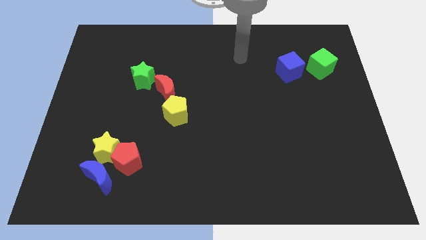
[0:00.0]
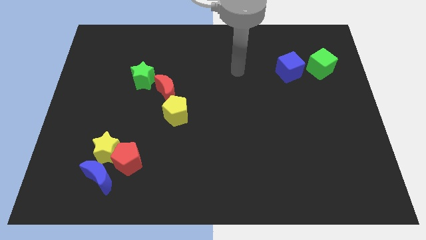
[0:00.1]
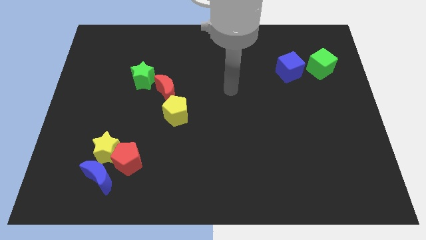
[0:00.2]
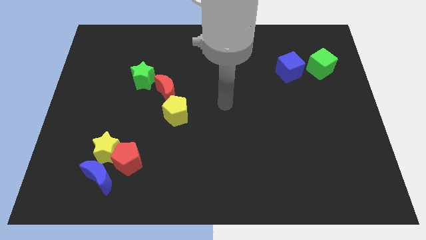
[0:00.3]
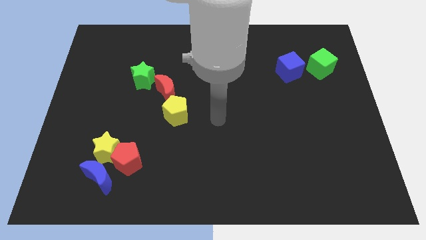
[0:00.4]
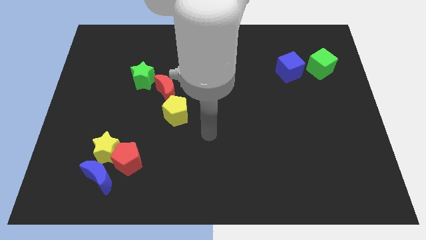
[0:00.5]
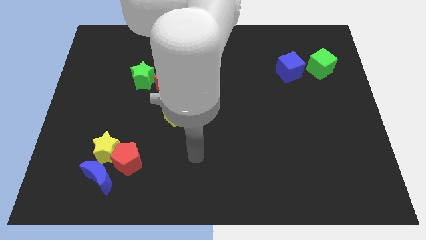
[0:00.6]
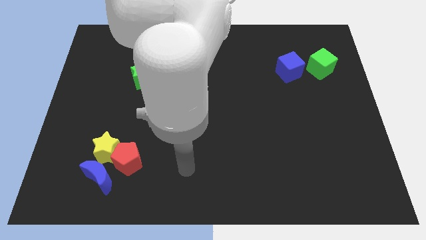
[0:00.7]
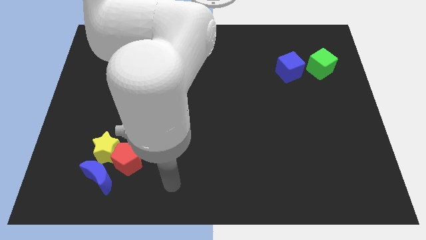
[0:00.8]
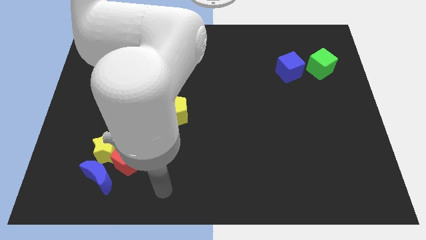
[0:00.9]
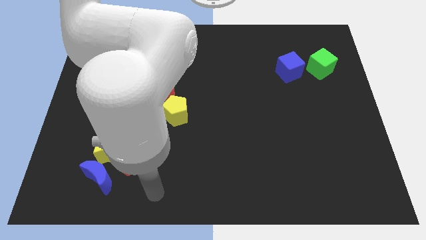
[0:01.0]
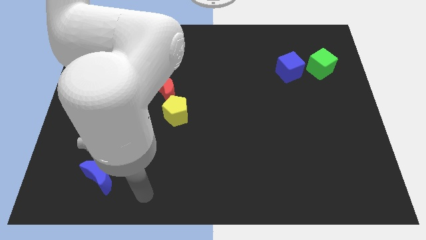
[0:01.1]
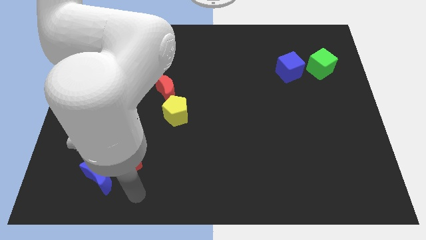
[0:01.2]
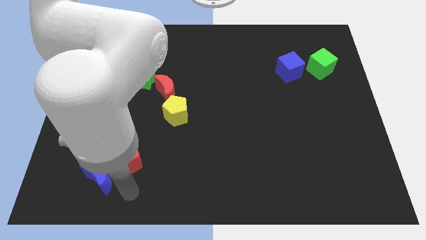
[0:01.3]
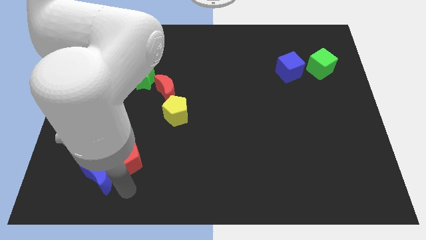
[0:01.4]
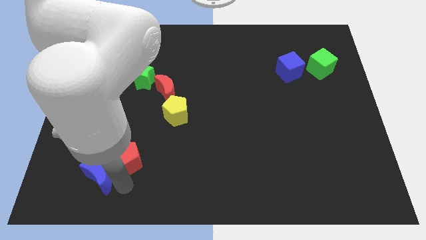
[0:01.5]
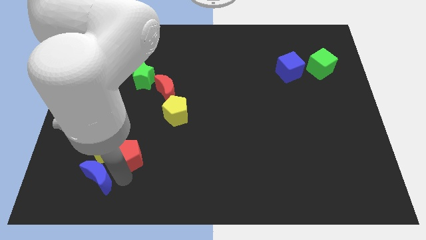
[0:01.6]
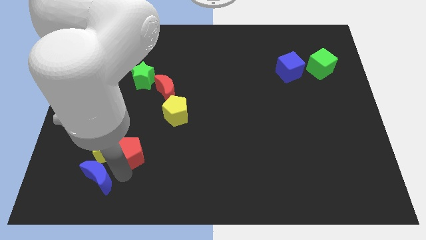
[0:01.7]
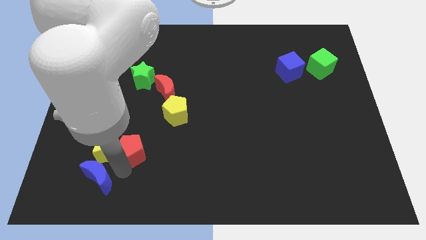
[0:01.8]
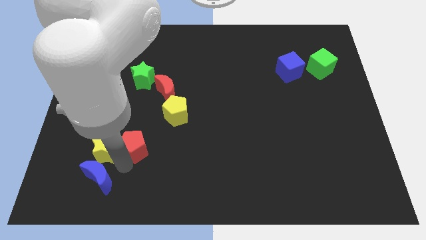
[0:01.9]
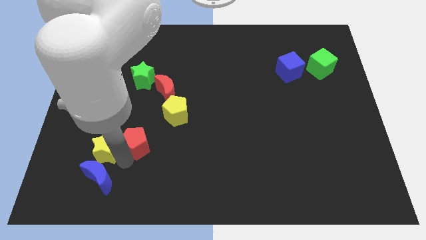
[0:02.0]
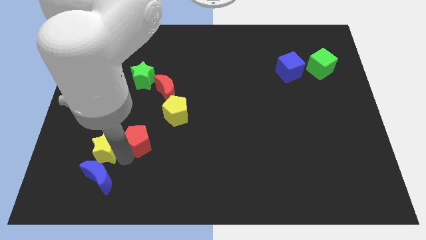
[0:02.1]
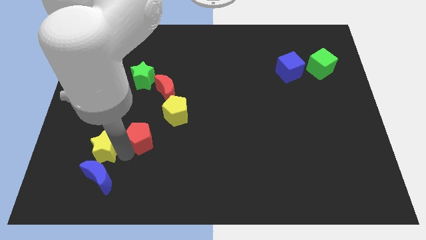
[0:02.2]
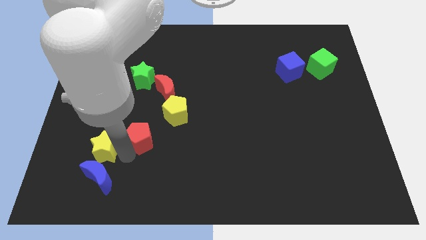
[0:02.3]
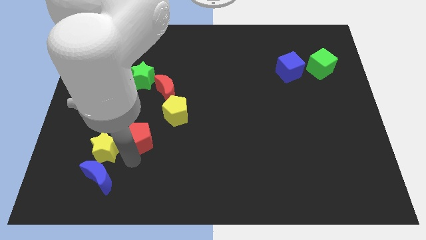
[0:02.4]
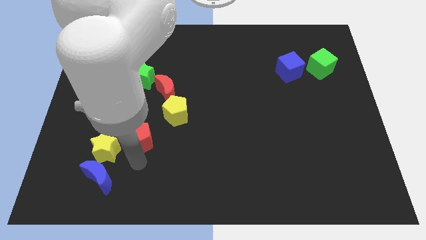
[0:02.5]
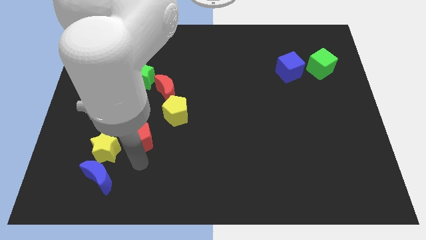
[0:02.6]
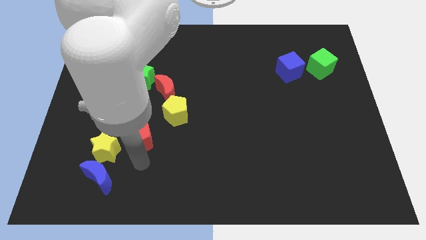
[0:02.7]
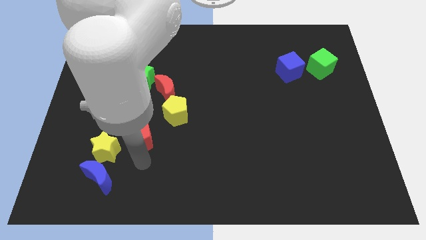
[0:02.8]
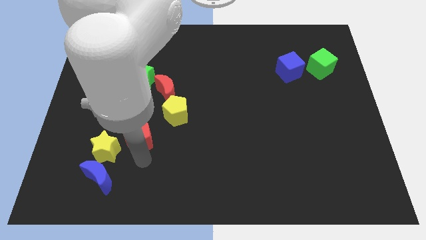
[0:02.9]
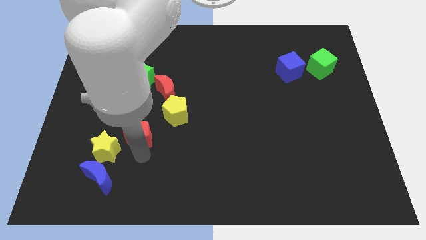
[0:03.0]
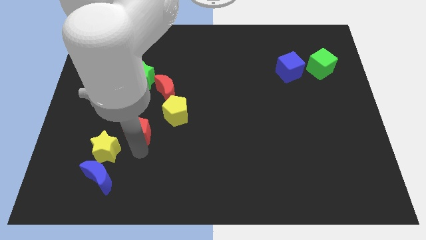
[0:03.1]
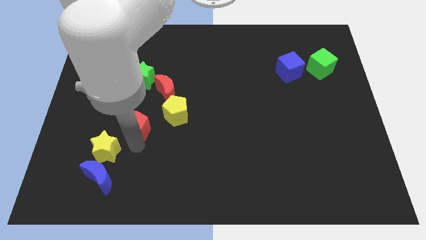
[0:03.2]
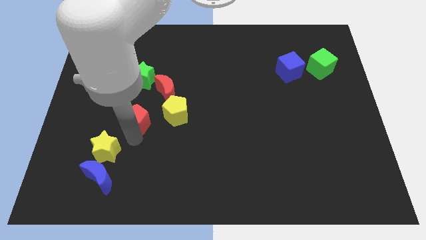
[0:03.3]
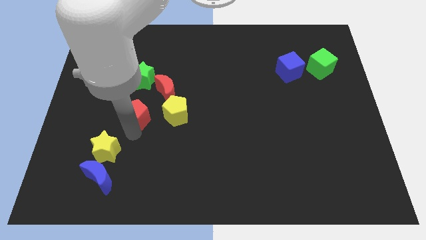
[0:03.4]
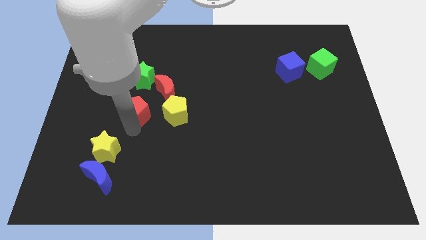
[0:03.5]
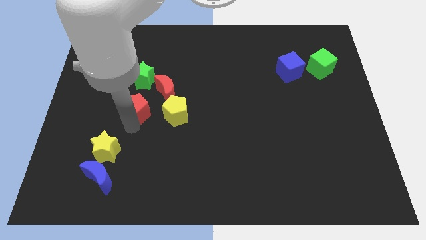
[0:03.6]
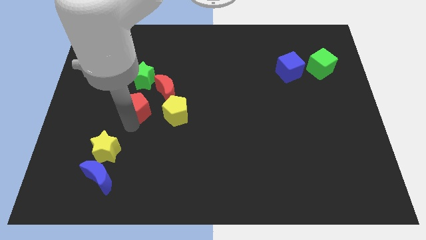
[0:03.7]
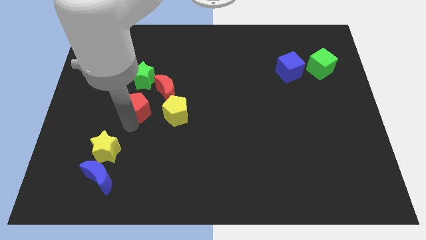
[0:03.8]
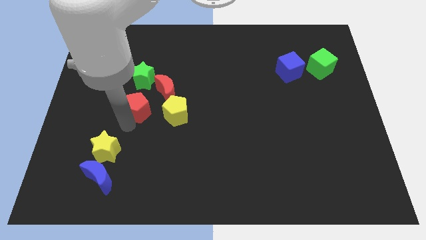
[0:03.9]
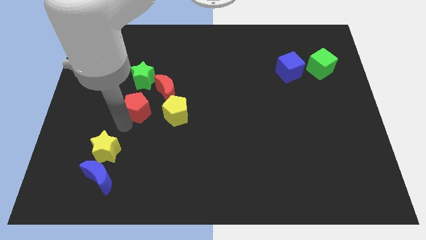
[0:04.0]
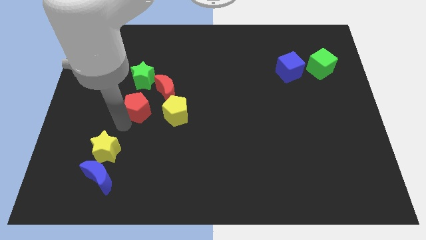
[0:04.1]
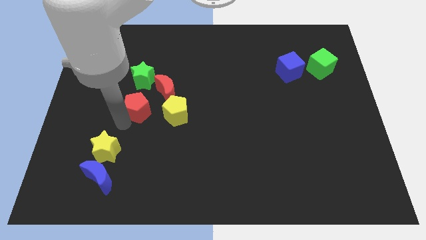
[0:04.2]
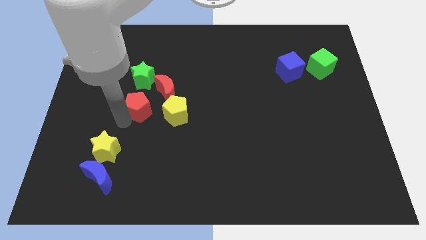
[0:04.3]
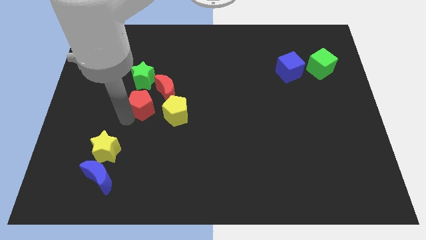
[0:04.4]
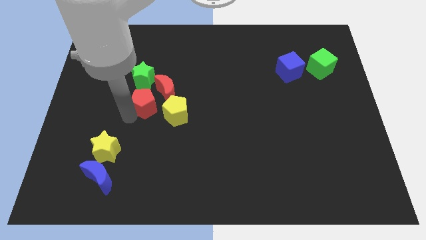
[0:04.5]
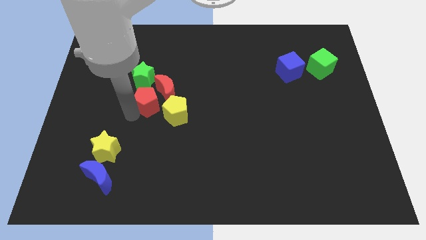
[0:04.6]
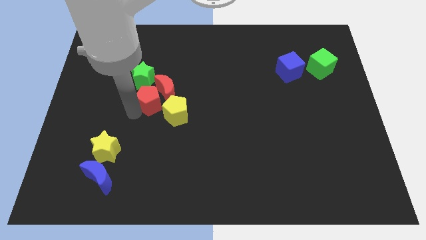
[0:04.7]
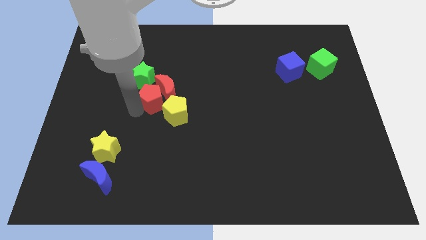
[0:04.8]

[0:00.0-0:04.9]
slide the red pentagon close to the red moon

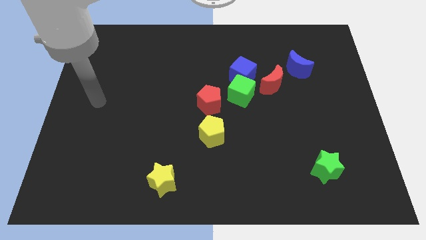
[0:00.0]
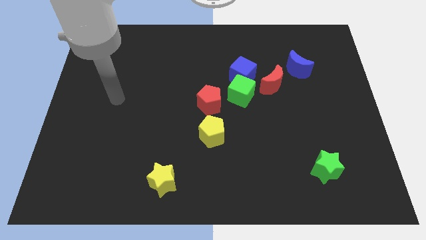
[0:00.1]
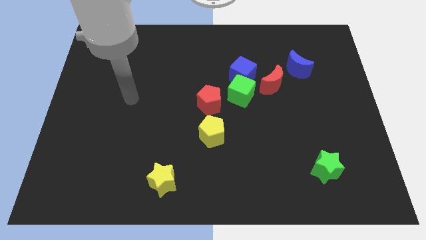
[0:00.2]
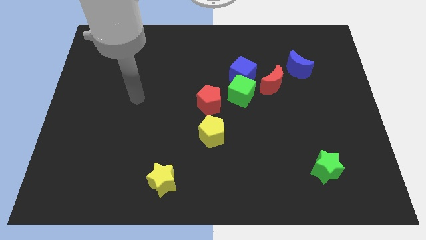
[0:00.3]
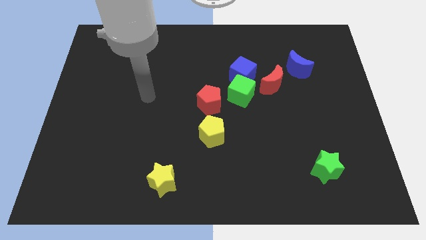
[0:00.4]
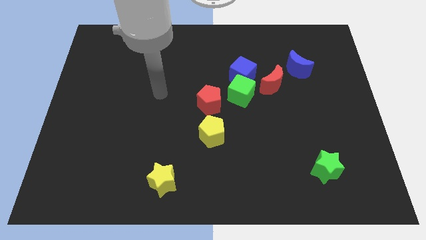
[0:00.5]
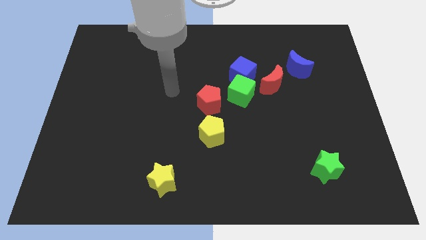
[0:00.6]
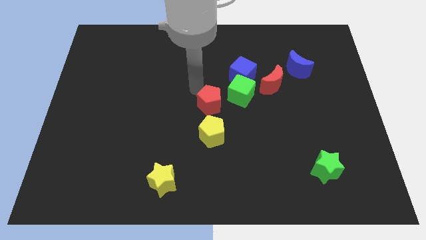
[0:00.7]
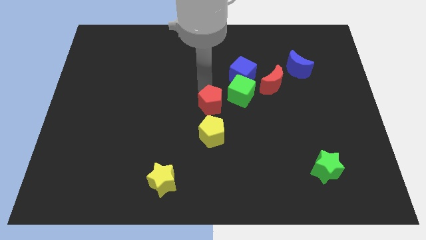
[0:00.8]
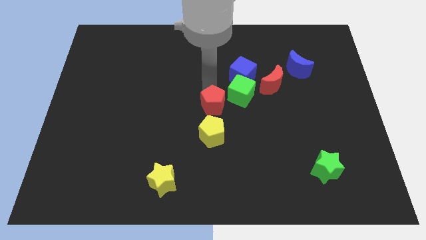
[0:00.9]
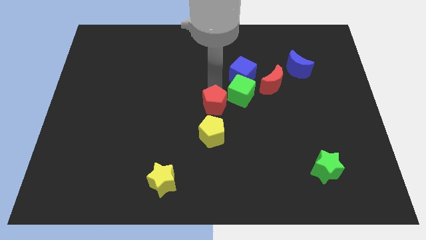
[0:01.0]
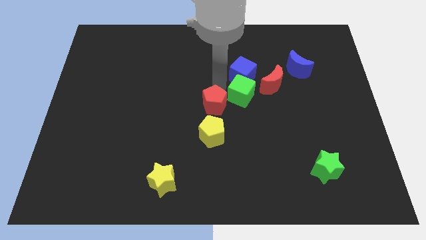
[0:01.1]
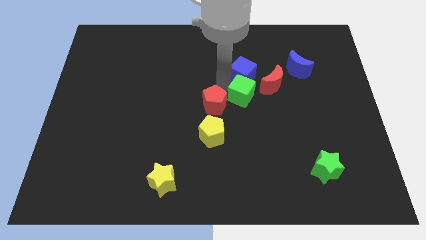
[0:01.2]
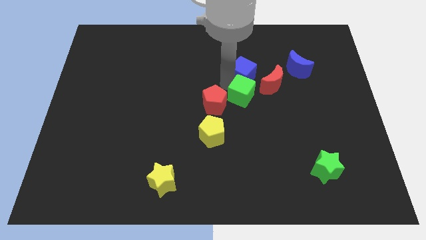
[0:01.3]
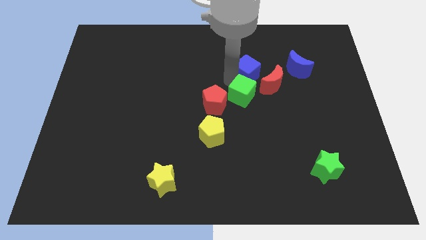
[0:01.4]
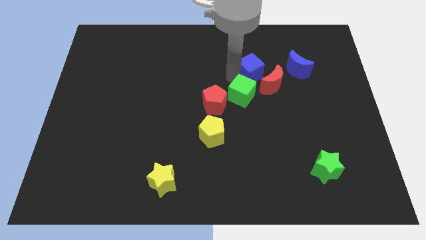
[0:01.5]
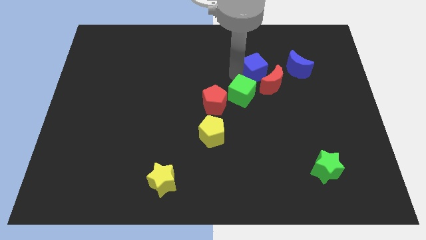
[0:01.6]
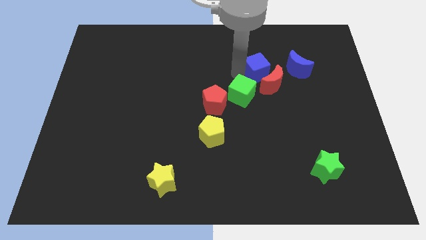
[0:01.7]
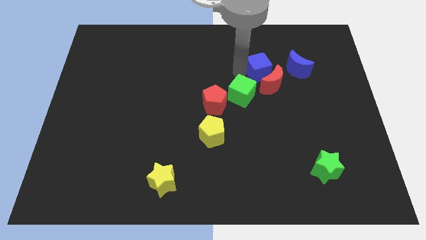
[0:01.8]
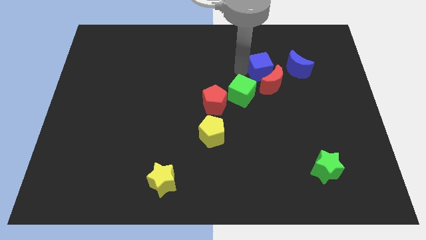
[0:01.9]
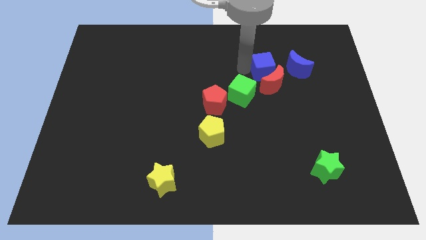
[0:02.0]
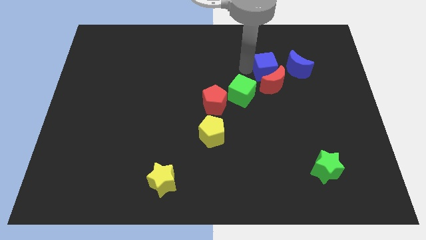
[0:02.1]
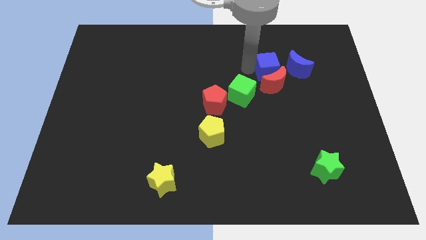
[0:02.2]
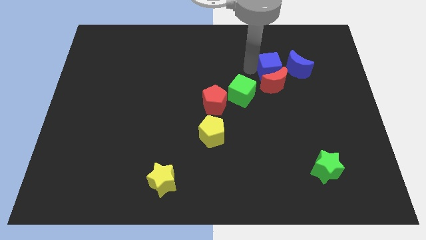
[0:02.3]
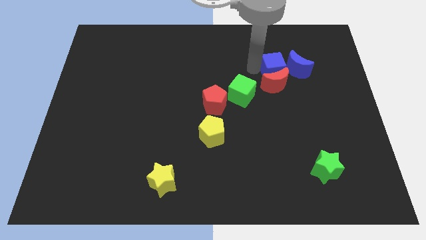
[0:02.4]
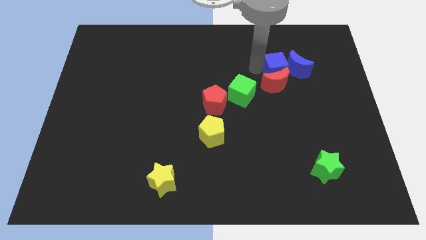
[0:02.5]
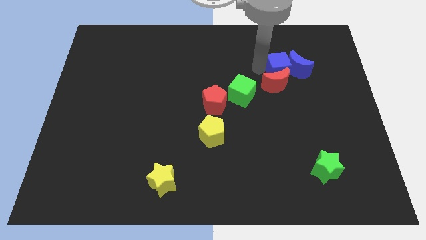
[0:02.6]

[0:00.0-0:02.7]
push the blue cube towards the blue moon

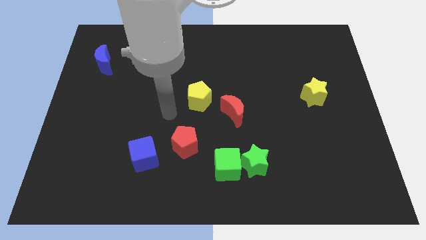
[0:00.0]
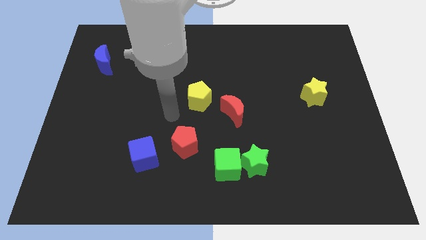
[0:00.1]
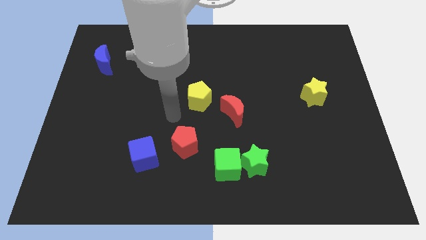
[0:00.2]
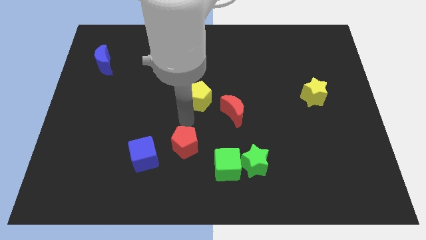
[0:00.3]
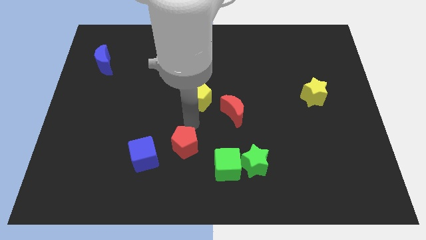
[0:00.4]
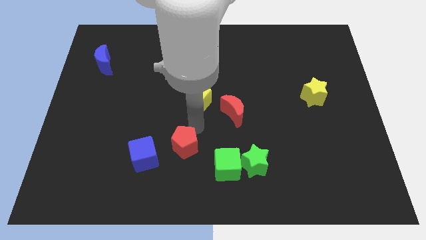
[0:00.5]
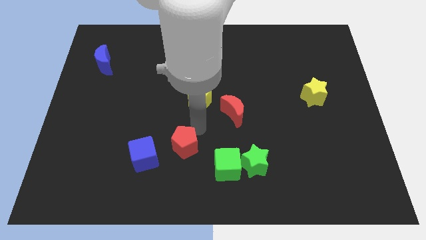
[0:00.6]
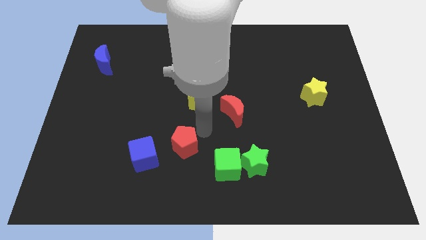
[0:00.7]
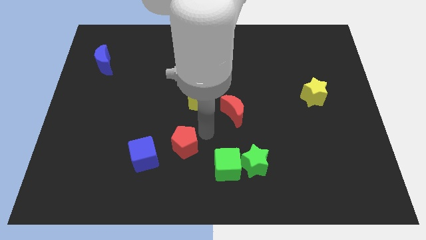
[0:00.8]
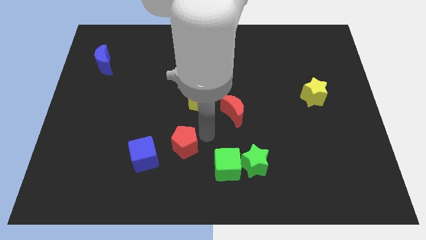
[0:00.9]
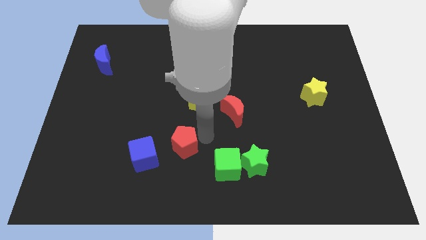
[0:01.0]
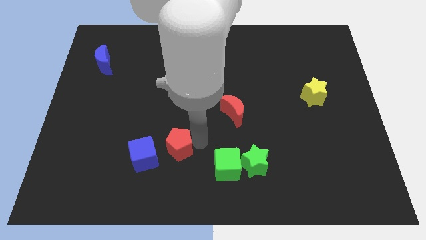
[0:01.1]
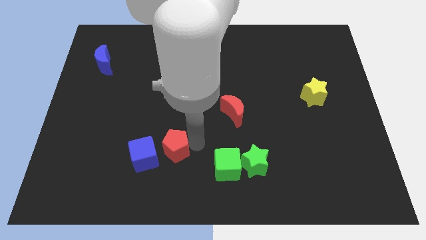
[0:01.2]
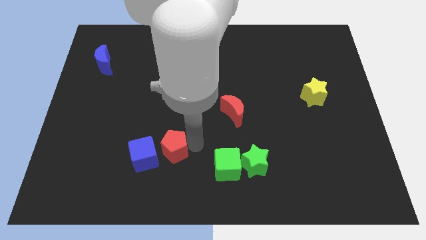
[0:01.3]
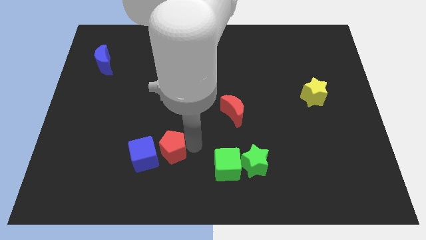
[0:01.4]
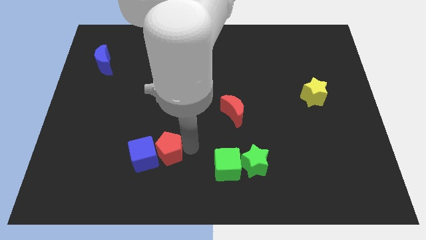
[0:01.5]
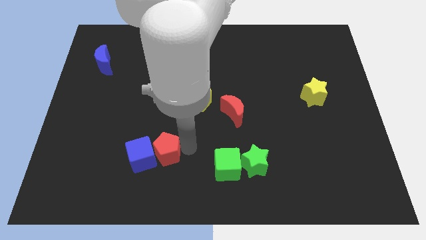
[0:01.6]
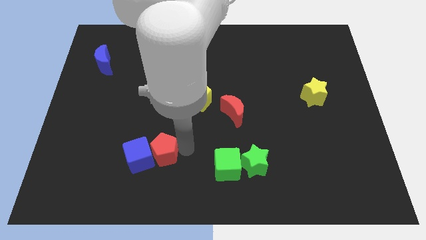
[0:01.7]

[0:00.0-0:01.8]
slide the red pentagon towards the blue cube
